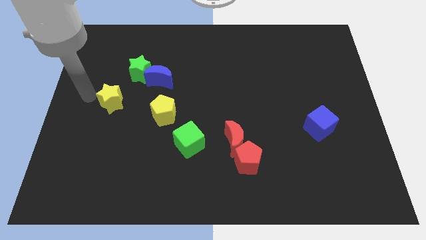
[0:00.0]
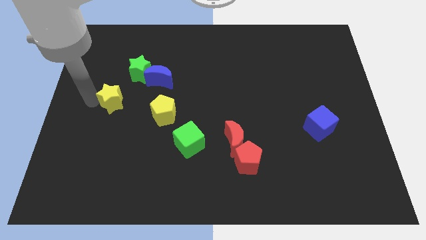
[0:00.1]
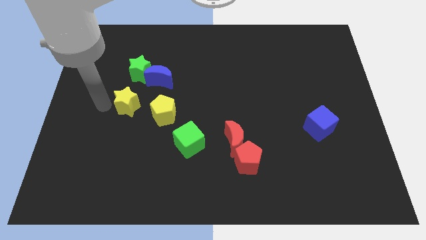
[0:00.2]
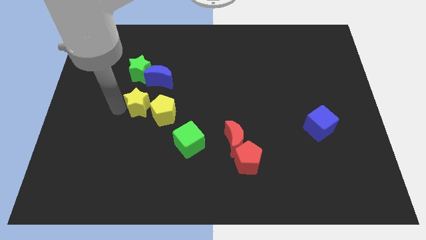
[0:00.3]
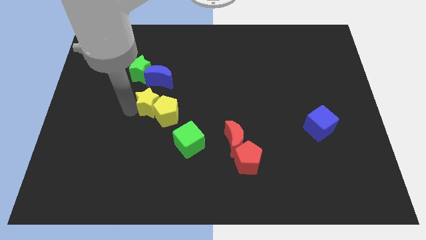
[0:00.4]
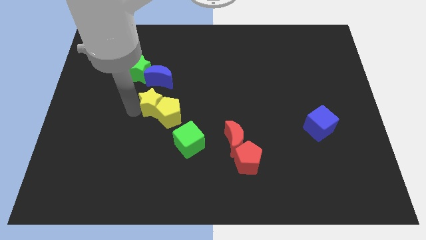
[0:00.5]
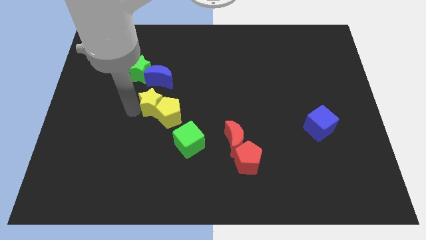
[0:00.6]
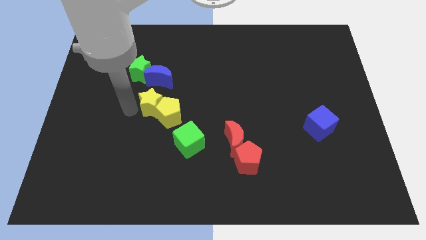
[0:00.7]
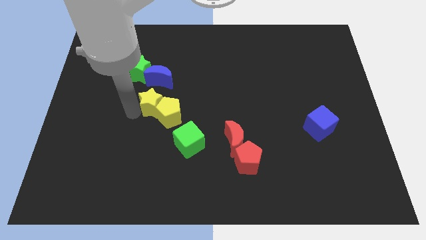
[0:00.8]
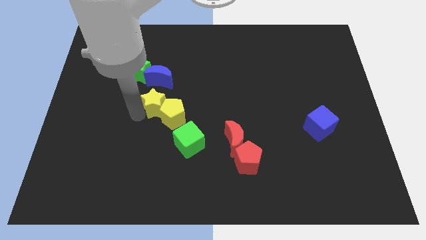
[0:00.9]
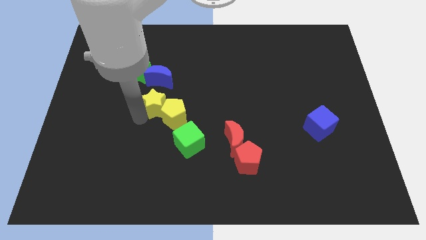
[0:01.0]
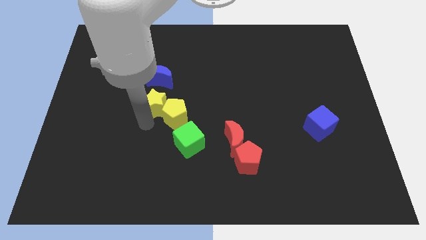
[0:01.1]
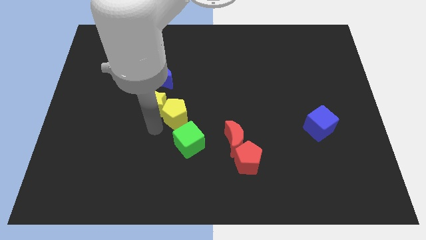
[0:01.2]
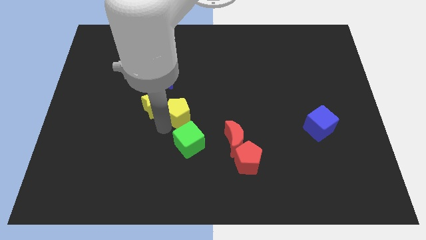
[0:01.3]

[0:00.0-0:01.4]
push yellow star into yellow pentagon

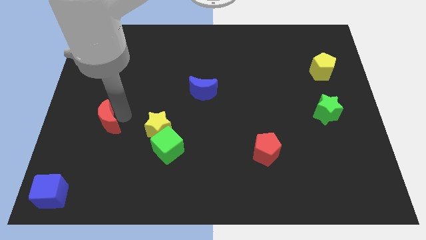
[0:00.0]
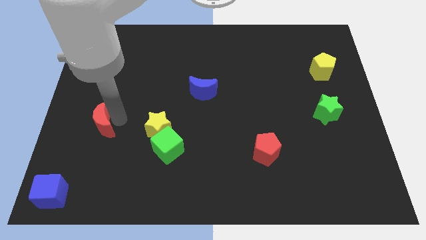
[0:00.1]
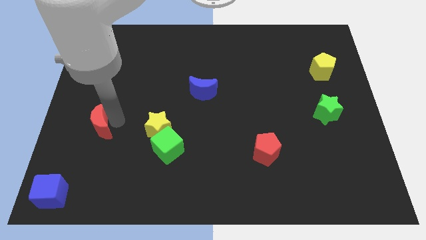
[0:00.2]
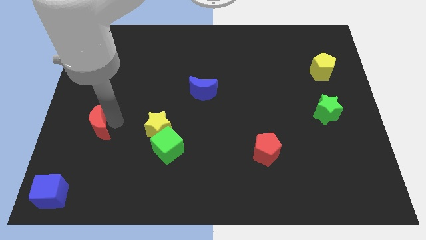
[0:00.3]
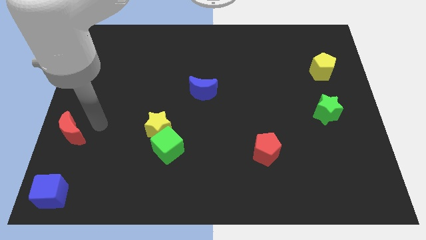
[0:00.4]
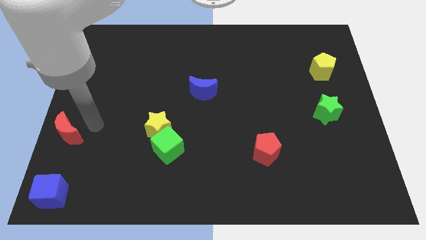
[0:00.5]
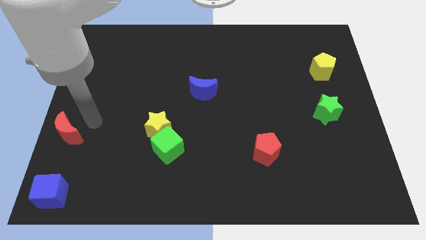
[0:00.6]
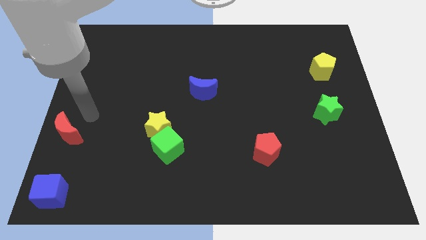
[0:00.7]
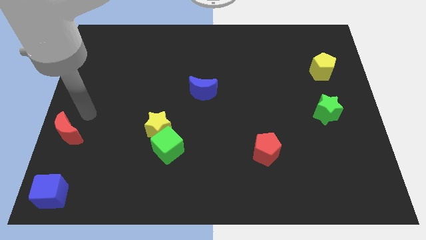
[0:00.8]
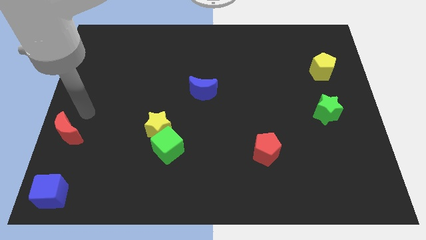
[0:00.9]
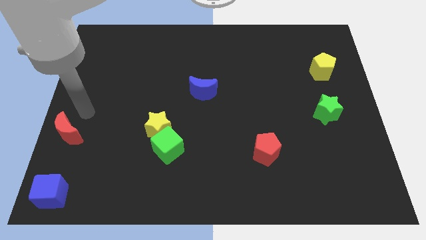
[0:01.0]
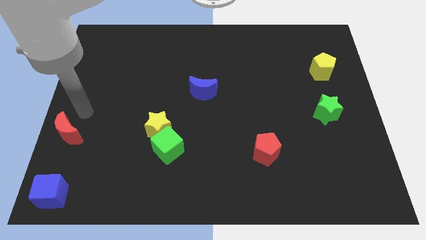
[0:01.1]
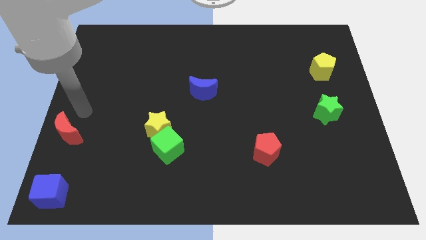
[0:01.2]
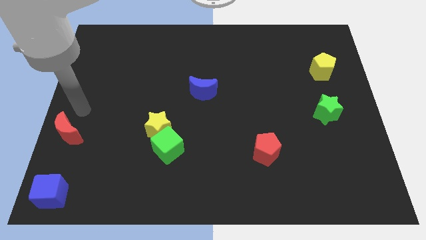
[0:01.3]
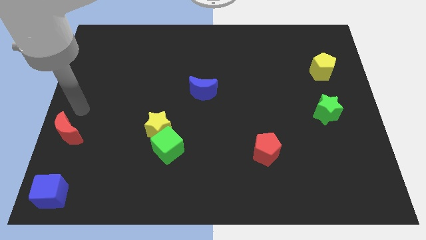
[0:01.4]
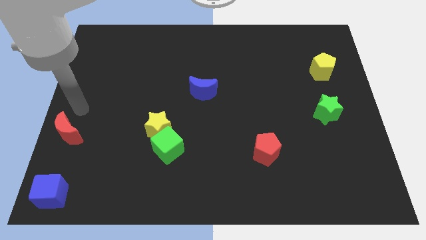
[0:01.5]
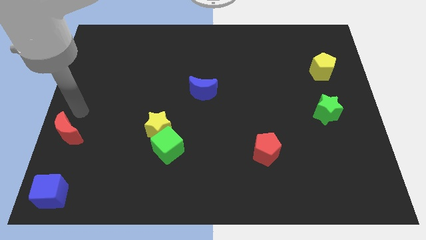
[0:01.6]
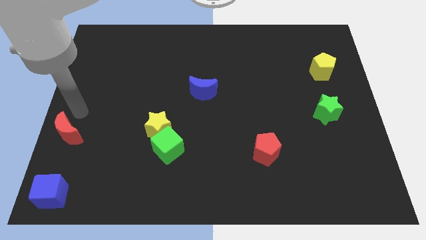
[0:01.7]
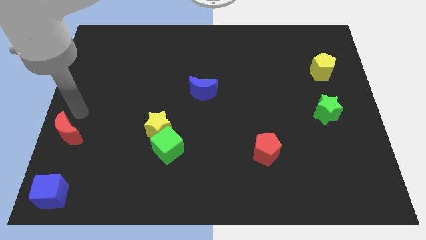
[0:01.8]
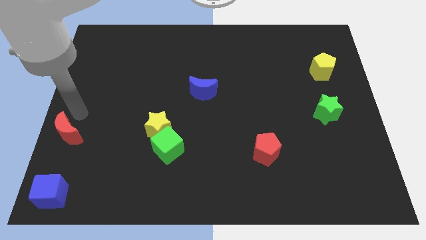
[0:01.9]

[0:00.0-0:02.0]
push the red moon to the left side

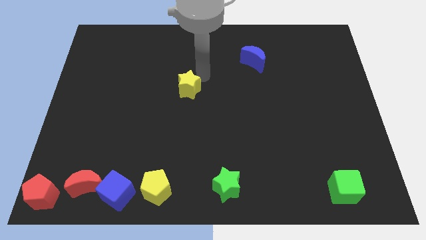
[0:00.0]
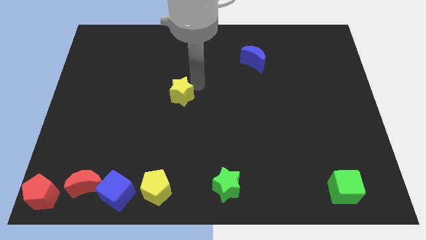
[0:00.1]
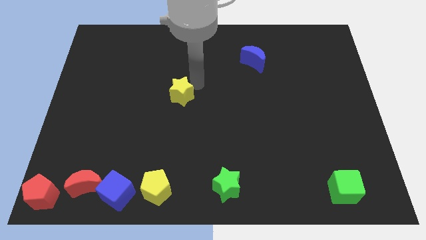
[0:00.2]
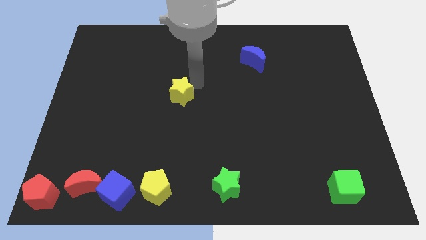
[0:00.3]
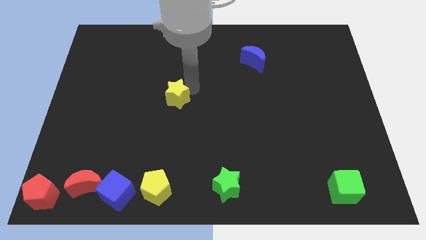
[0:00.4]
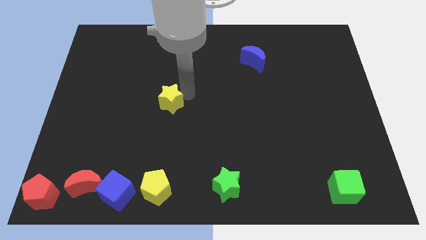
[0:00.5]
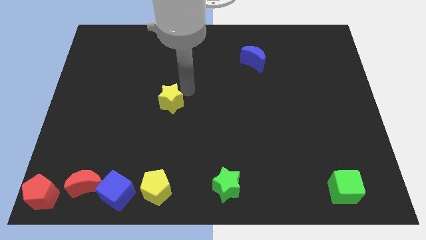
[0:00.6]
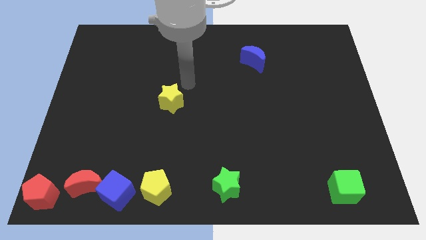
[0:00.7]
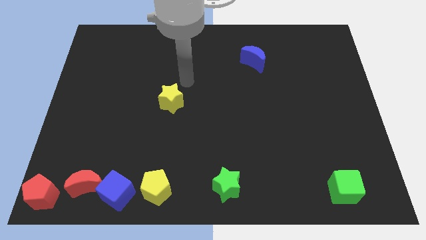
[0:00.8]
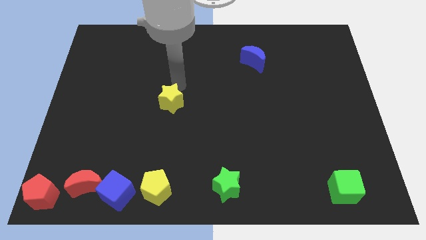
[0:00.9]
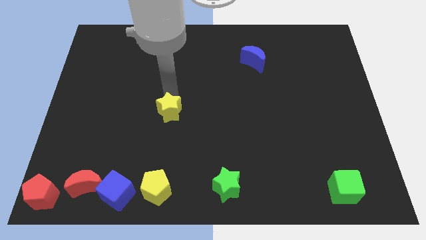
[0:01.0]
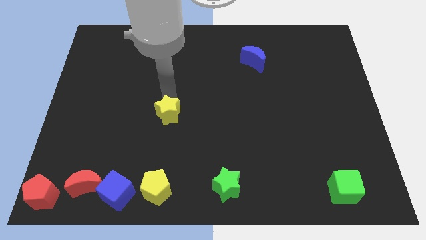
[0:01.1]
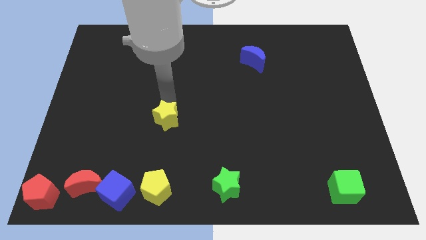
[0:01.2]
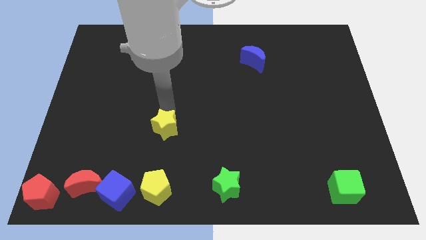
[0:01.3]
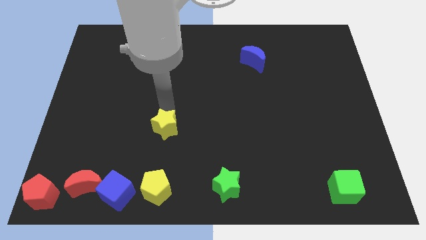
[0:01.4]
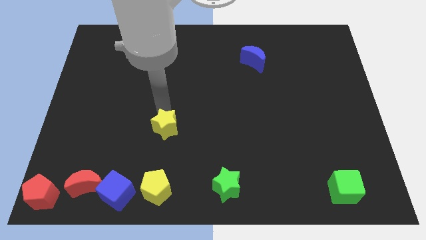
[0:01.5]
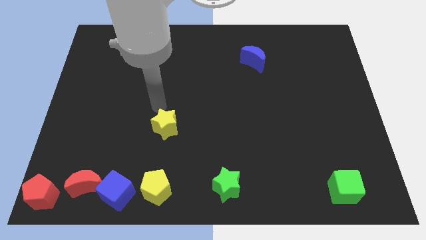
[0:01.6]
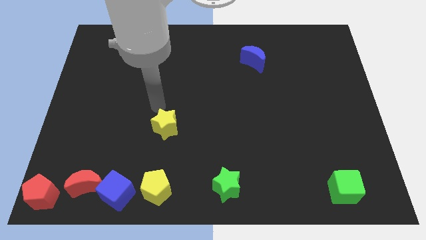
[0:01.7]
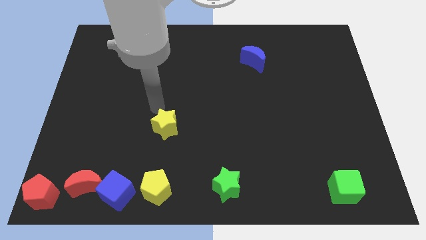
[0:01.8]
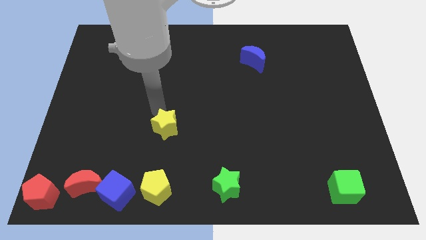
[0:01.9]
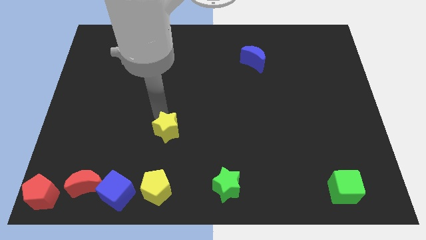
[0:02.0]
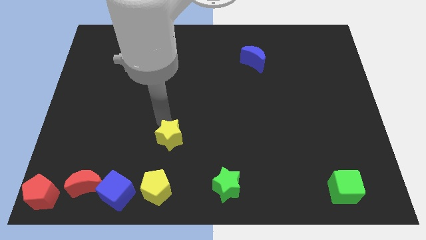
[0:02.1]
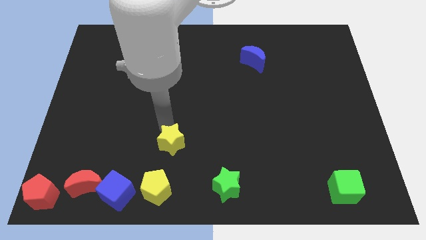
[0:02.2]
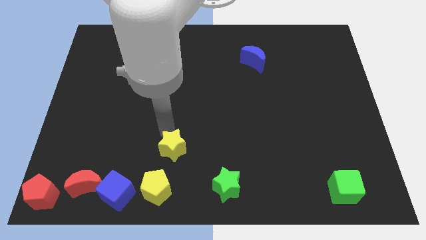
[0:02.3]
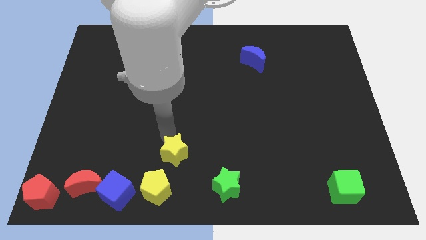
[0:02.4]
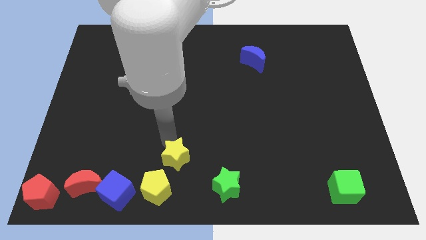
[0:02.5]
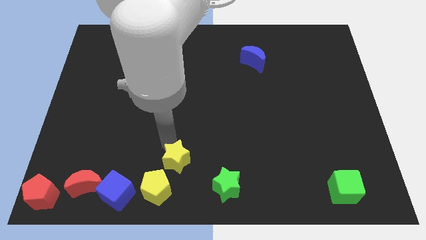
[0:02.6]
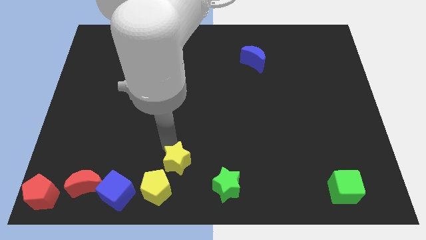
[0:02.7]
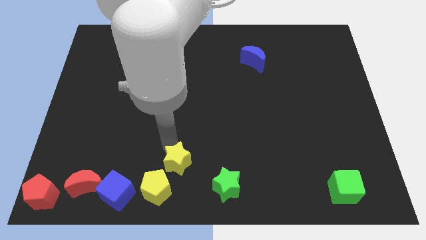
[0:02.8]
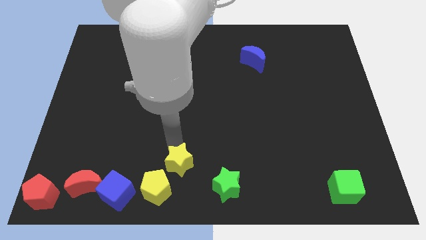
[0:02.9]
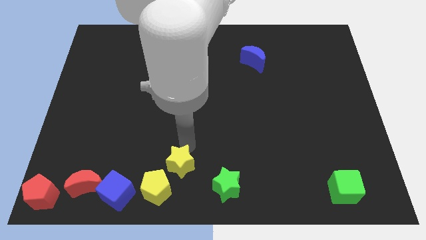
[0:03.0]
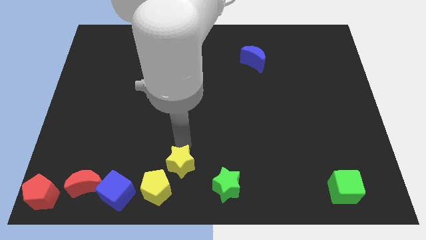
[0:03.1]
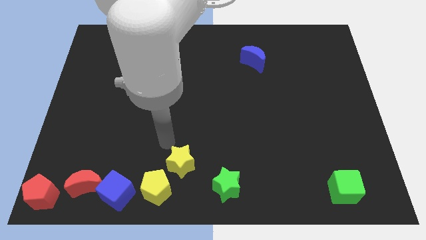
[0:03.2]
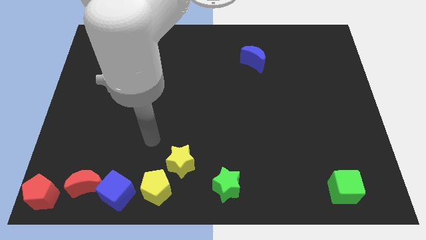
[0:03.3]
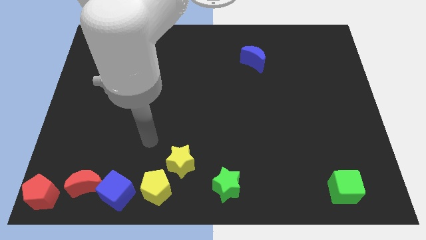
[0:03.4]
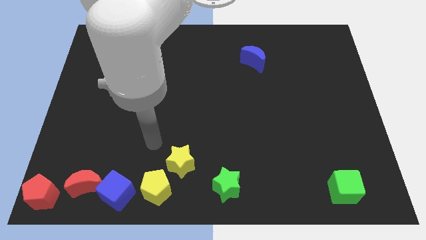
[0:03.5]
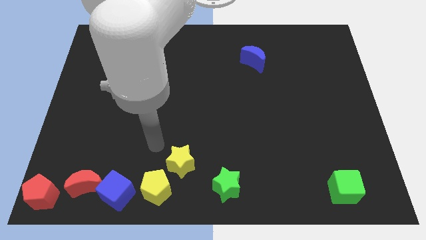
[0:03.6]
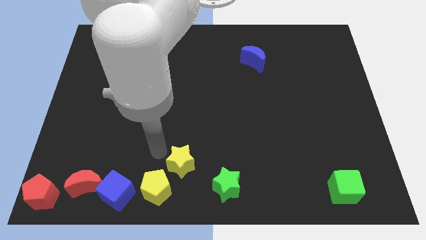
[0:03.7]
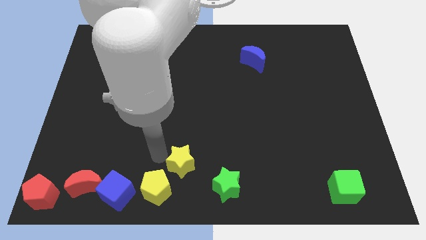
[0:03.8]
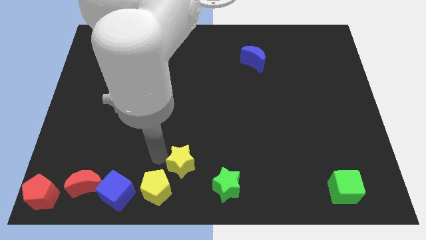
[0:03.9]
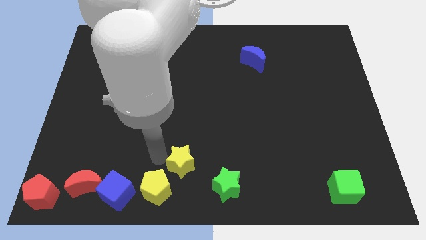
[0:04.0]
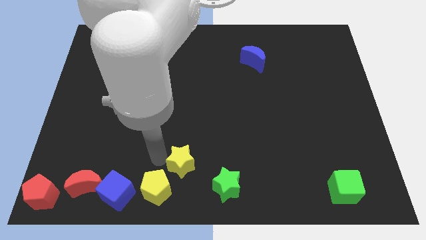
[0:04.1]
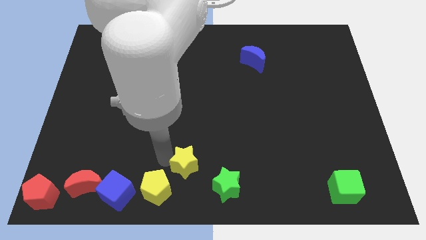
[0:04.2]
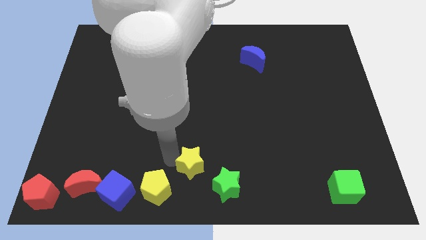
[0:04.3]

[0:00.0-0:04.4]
make a triangle out of three blocks at the bottom

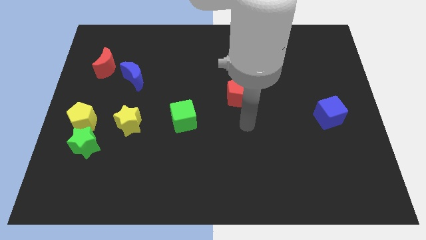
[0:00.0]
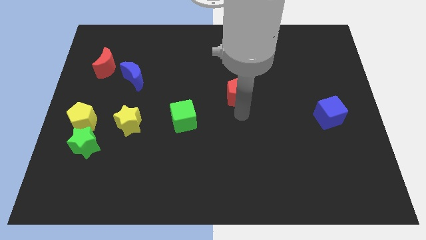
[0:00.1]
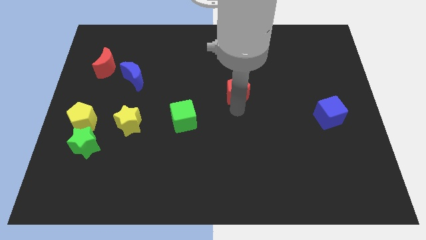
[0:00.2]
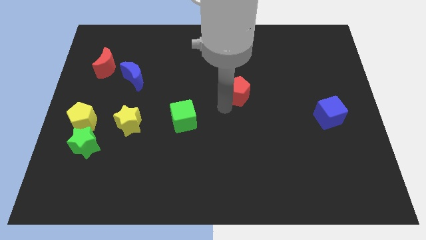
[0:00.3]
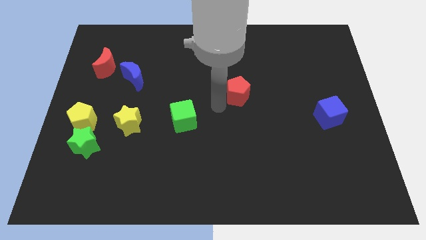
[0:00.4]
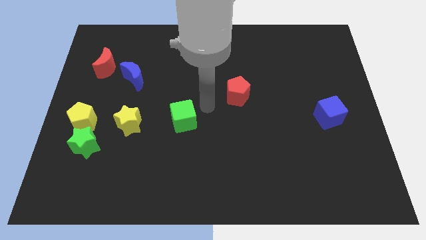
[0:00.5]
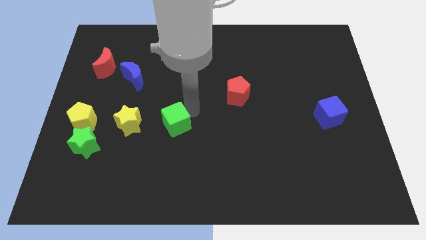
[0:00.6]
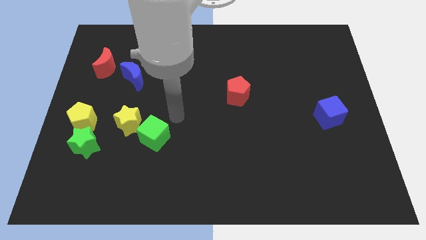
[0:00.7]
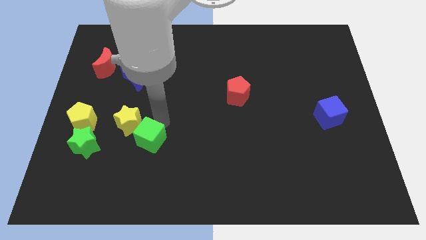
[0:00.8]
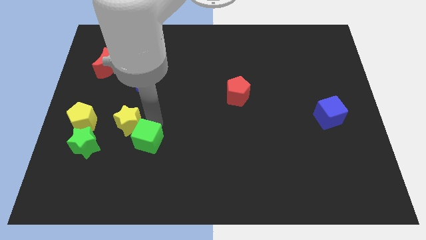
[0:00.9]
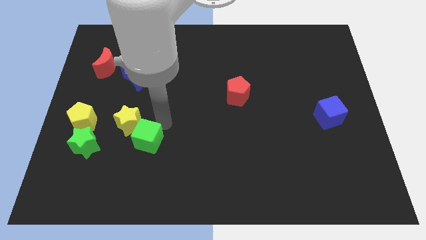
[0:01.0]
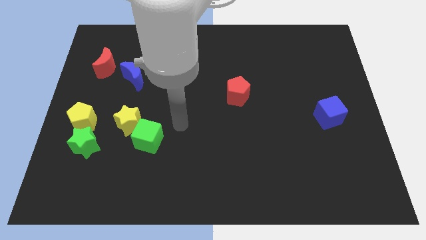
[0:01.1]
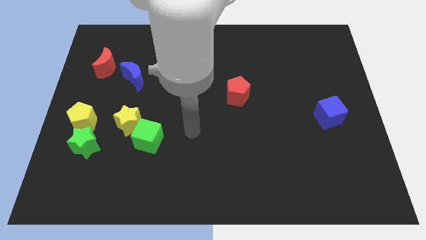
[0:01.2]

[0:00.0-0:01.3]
move the green cube close to the yellow star
